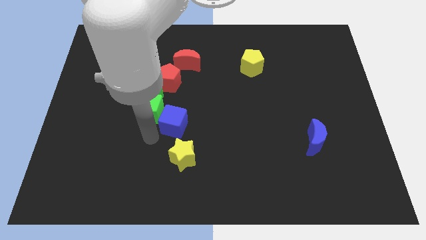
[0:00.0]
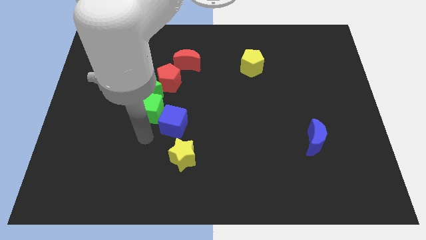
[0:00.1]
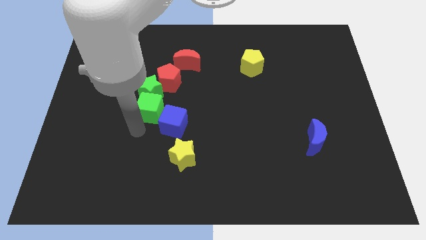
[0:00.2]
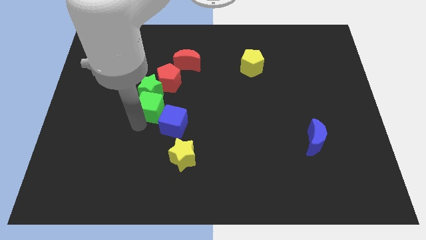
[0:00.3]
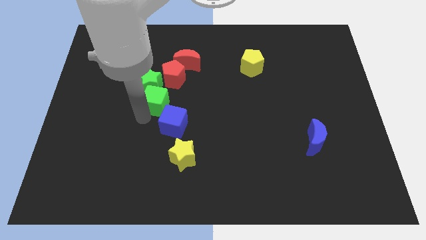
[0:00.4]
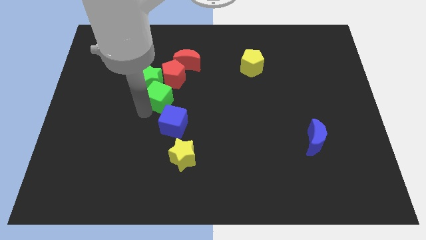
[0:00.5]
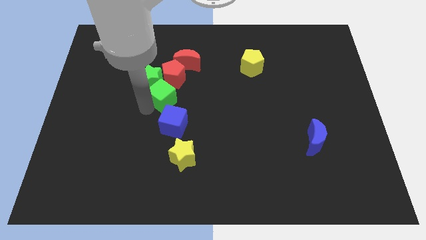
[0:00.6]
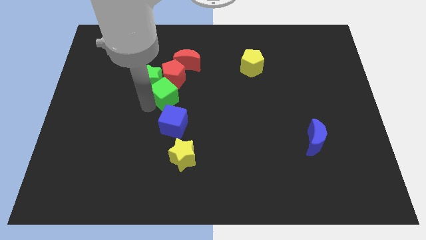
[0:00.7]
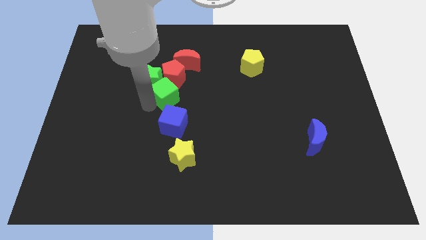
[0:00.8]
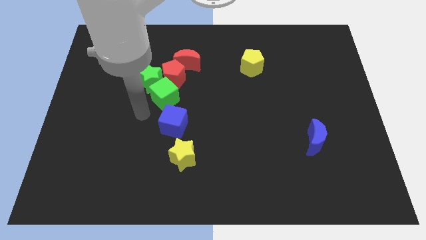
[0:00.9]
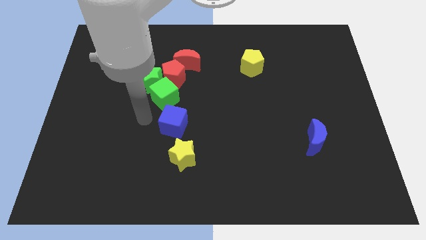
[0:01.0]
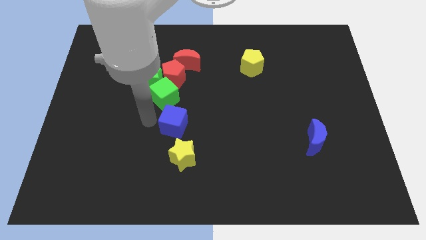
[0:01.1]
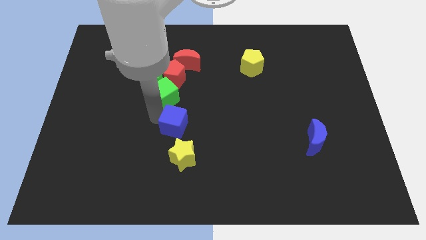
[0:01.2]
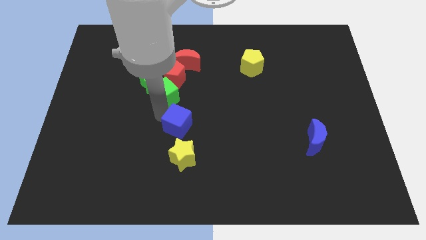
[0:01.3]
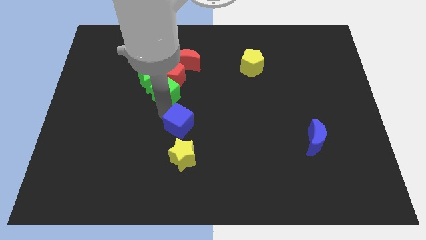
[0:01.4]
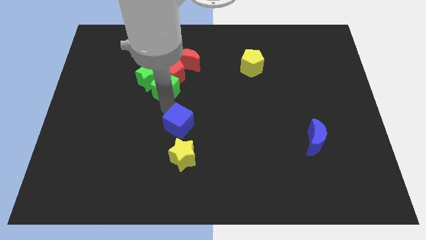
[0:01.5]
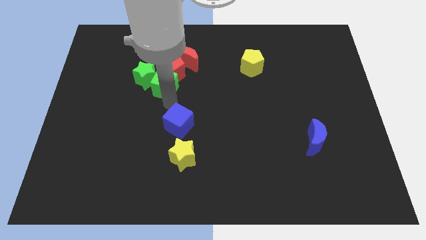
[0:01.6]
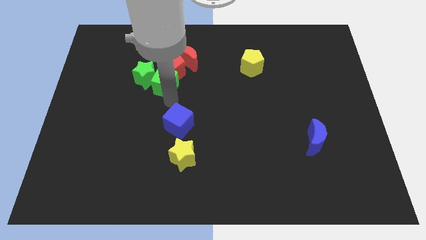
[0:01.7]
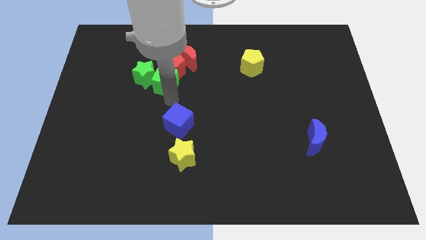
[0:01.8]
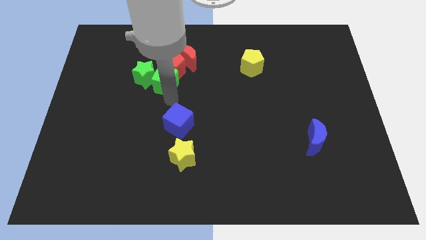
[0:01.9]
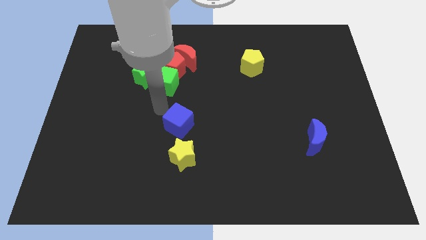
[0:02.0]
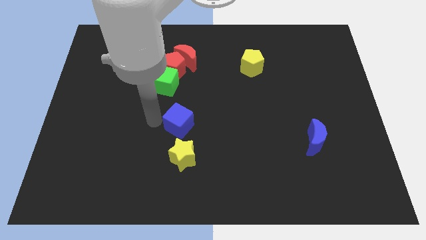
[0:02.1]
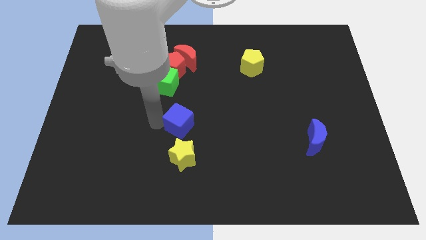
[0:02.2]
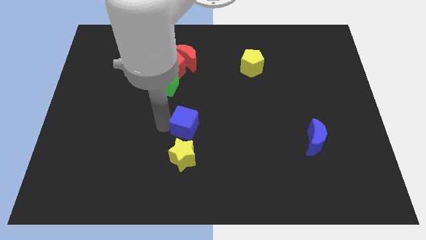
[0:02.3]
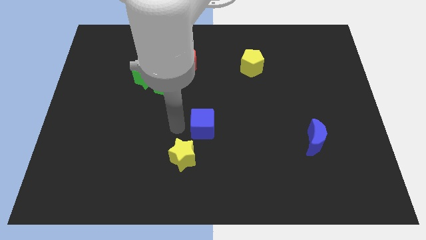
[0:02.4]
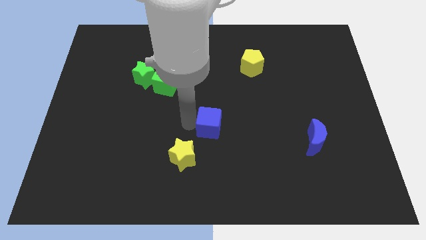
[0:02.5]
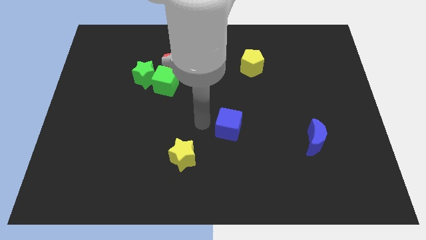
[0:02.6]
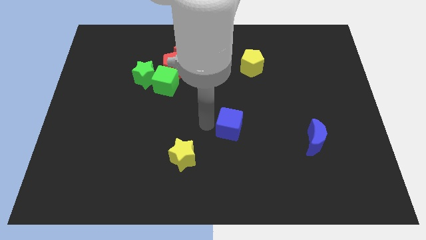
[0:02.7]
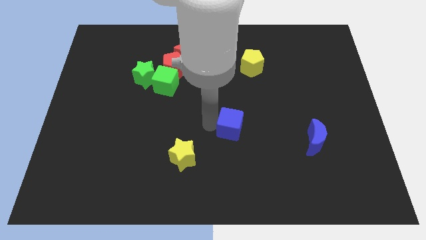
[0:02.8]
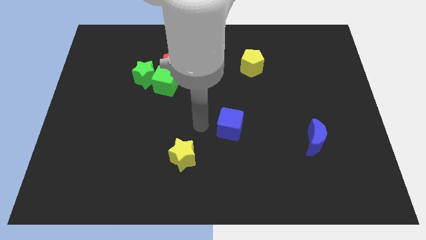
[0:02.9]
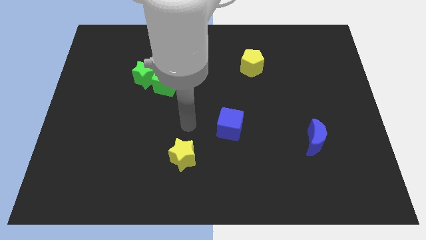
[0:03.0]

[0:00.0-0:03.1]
push the blue cube away from the group of blocks

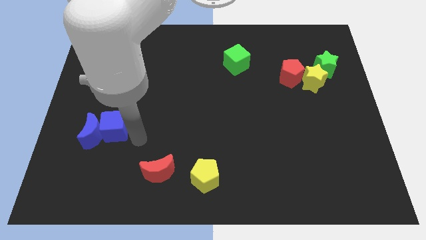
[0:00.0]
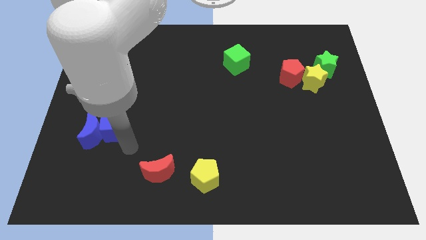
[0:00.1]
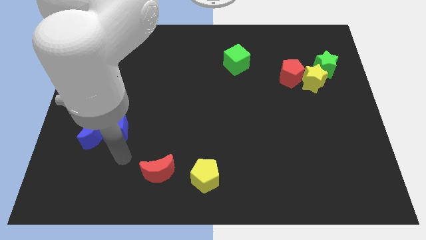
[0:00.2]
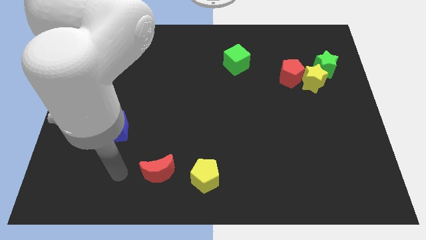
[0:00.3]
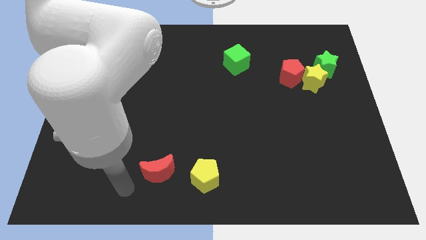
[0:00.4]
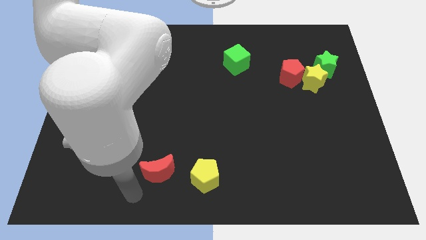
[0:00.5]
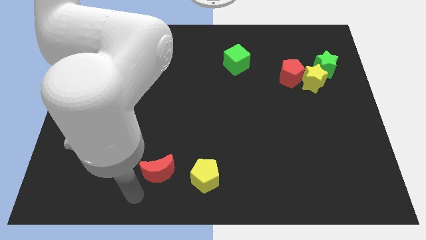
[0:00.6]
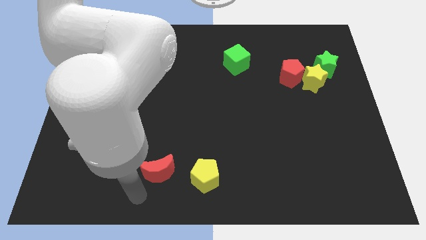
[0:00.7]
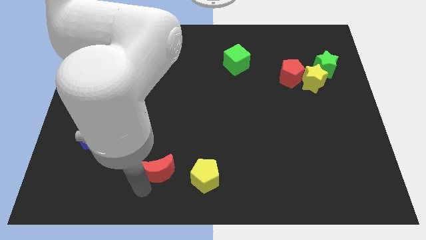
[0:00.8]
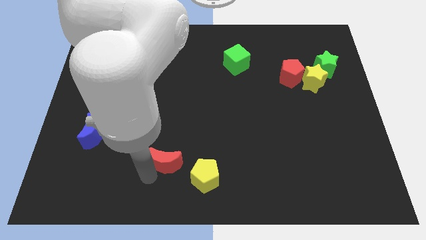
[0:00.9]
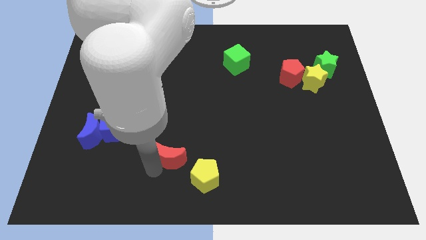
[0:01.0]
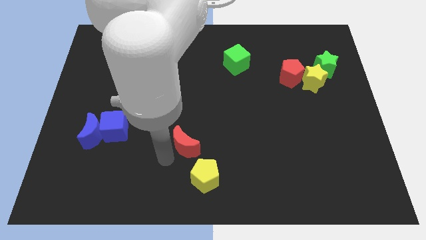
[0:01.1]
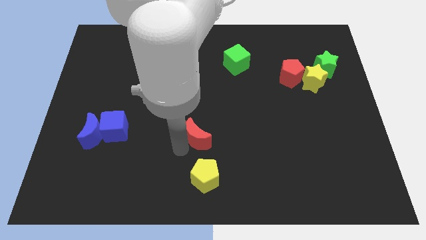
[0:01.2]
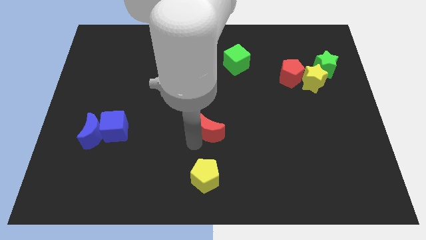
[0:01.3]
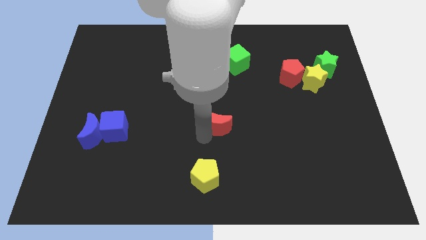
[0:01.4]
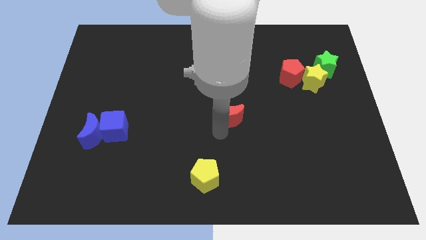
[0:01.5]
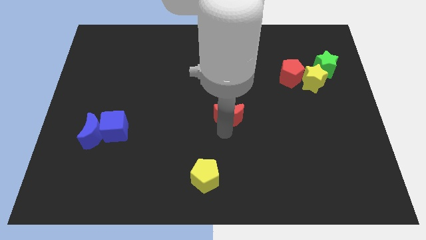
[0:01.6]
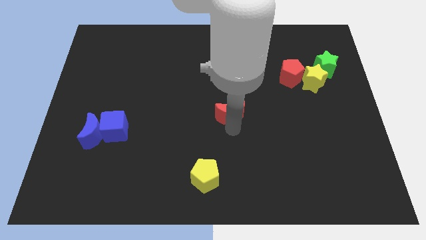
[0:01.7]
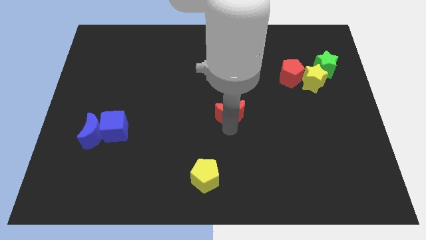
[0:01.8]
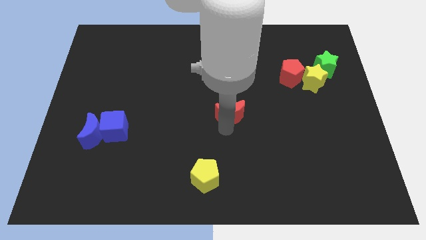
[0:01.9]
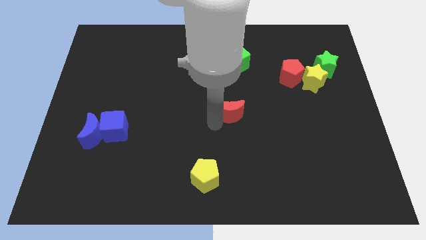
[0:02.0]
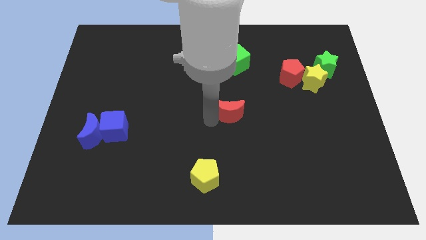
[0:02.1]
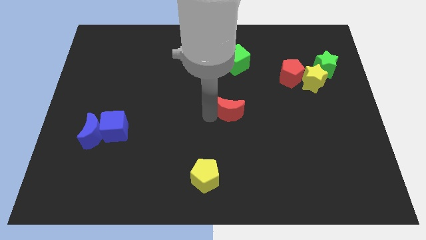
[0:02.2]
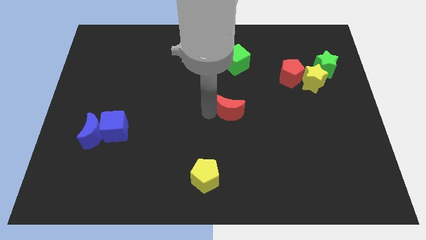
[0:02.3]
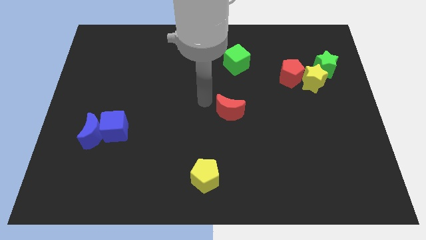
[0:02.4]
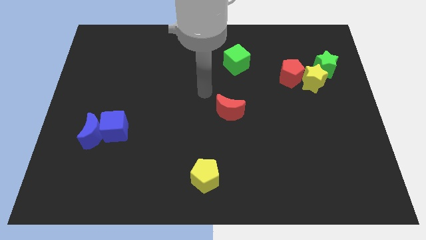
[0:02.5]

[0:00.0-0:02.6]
place the red crescent parallel to the green cube

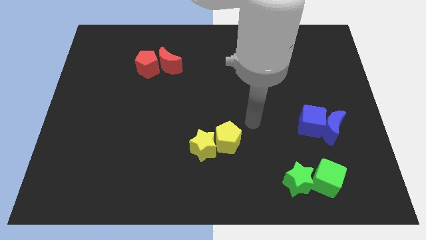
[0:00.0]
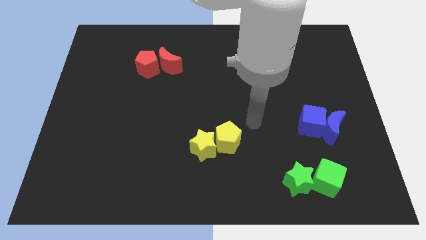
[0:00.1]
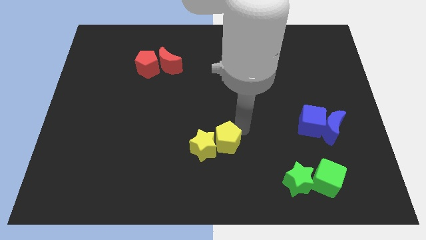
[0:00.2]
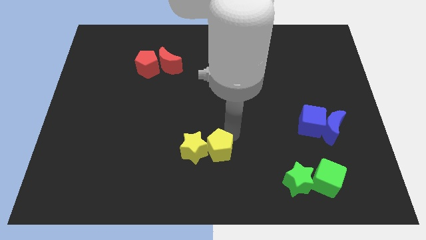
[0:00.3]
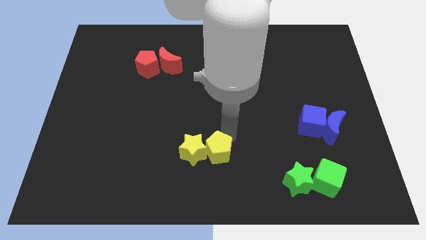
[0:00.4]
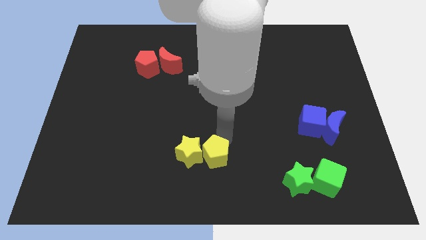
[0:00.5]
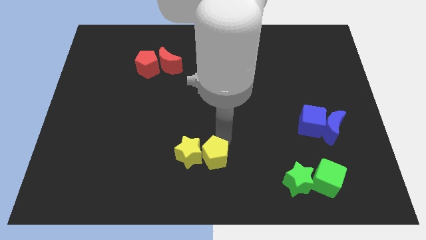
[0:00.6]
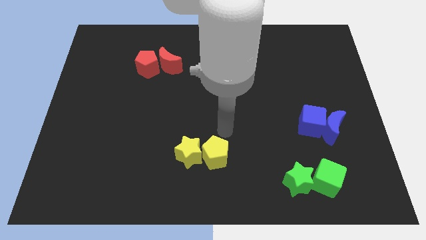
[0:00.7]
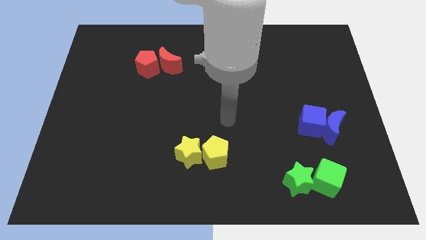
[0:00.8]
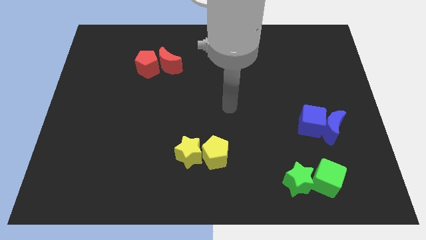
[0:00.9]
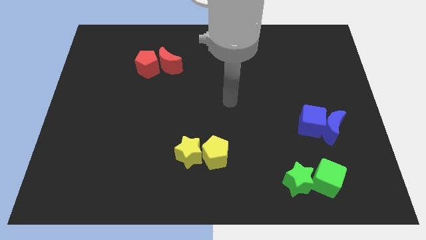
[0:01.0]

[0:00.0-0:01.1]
move the yellow pentagon and yellow star towards bottom left

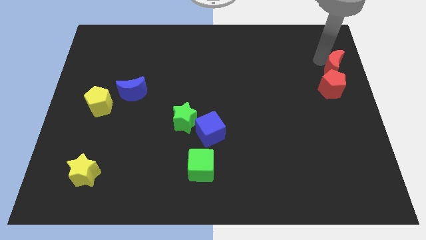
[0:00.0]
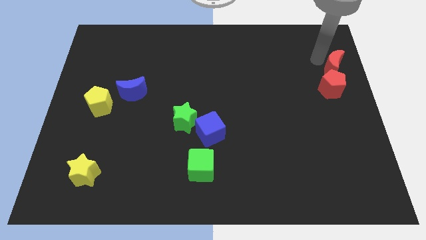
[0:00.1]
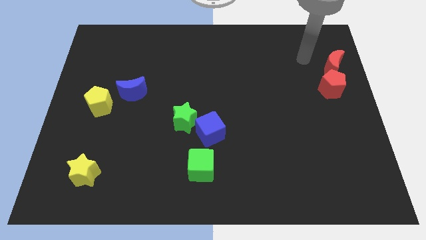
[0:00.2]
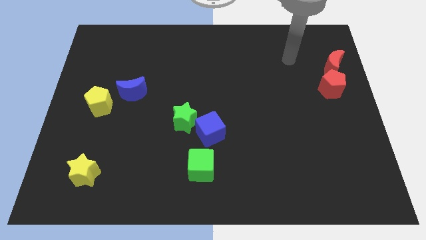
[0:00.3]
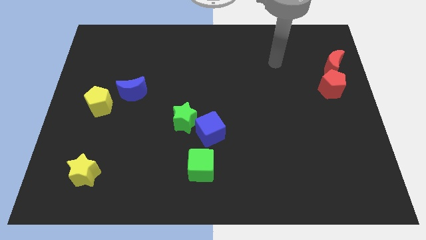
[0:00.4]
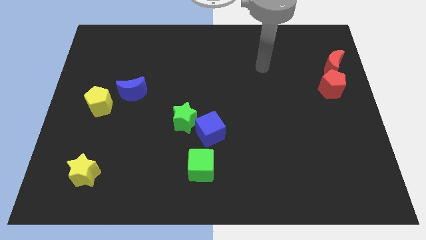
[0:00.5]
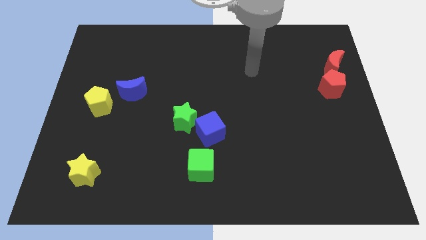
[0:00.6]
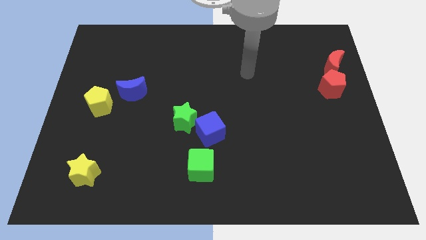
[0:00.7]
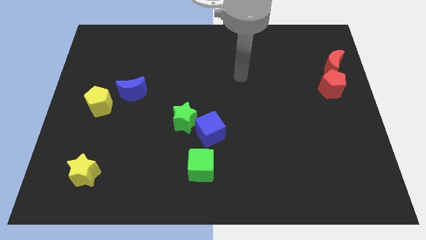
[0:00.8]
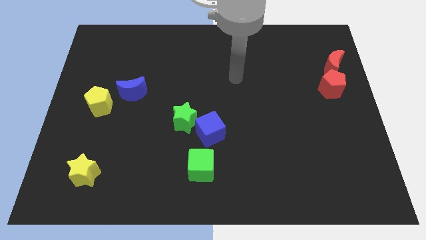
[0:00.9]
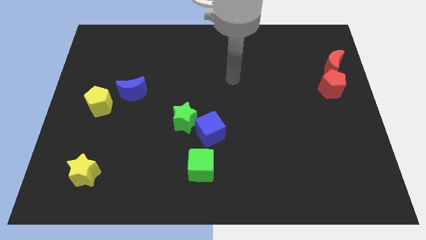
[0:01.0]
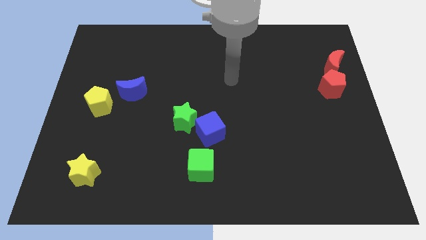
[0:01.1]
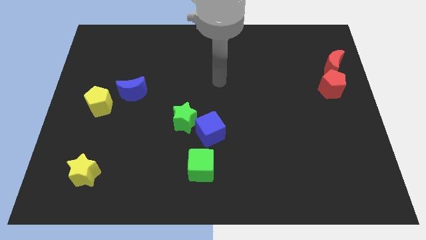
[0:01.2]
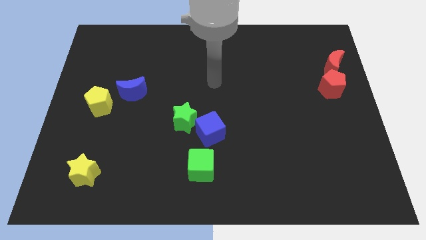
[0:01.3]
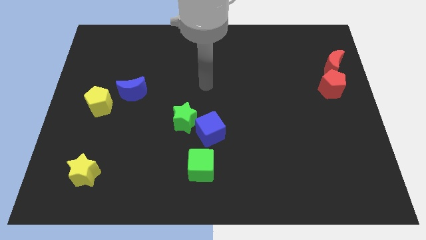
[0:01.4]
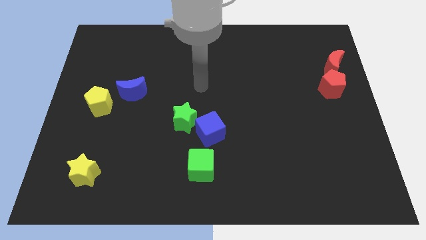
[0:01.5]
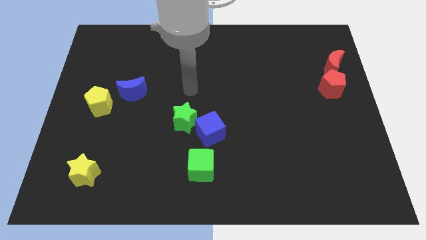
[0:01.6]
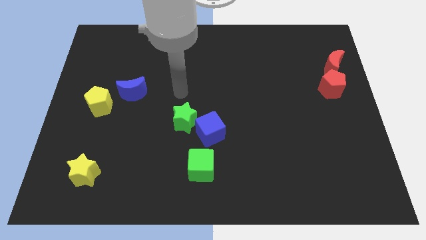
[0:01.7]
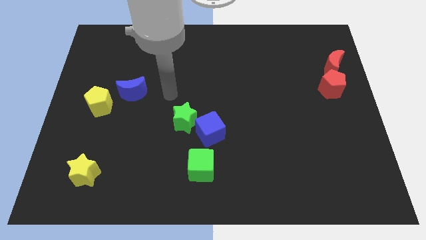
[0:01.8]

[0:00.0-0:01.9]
move your arm away from the red crescent

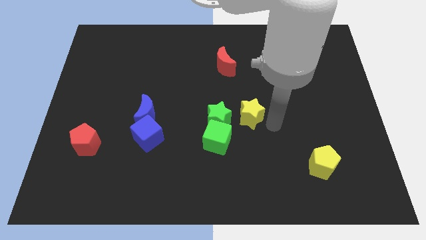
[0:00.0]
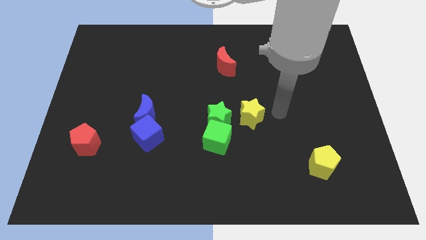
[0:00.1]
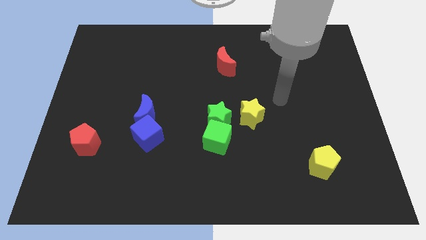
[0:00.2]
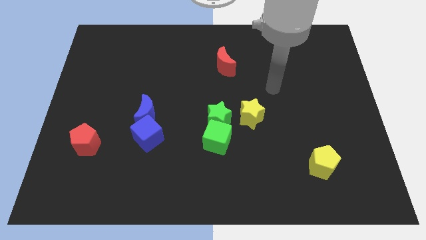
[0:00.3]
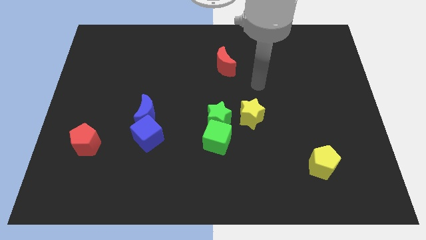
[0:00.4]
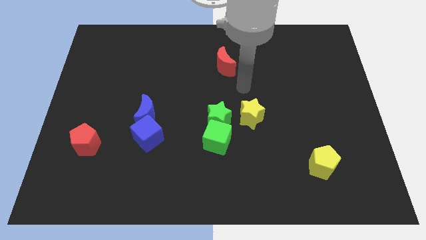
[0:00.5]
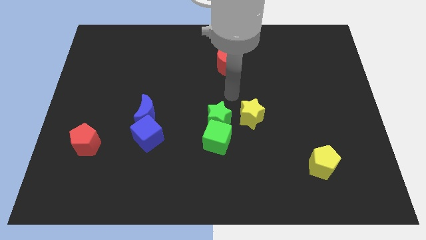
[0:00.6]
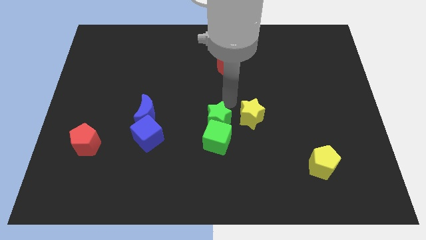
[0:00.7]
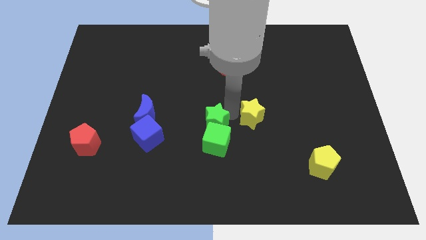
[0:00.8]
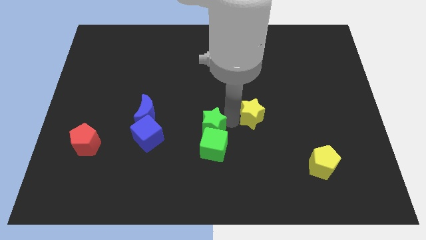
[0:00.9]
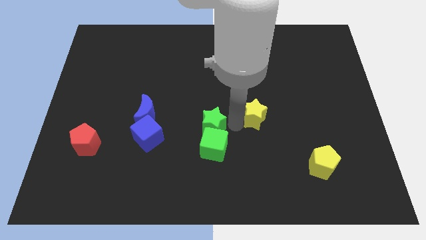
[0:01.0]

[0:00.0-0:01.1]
place your arm in between the yellow star and the green star
